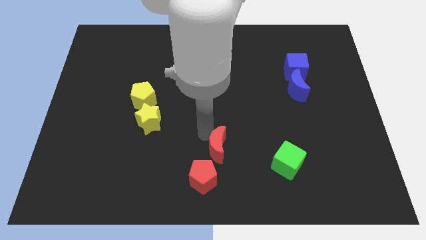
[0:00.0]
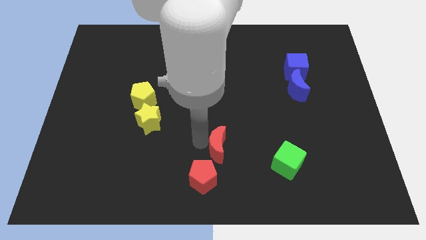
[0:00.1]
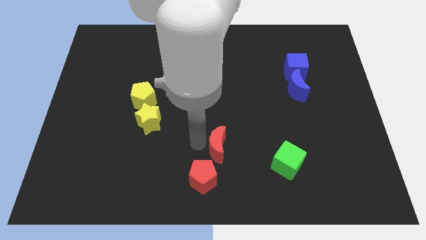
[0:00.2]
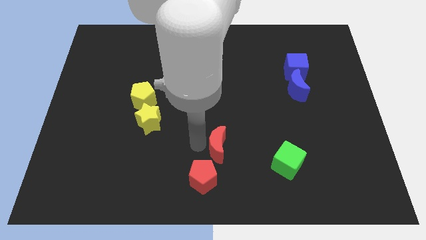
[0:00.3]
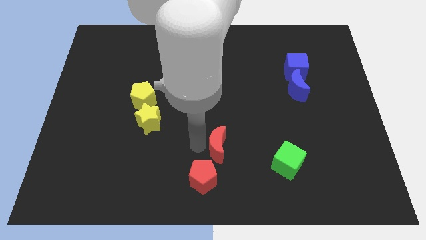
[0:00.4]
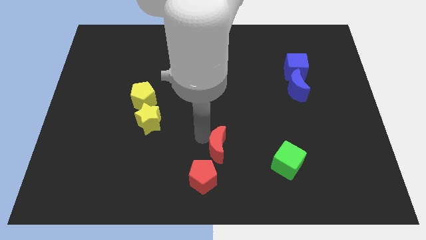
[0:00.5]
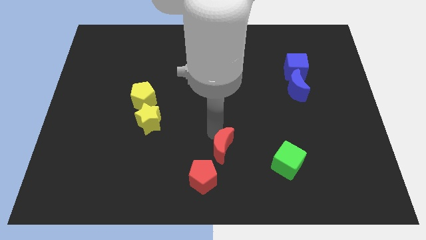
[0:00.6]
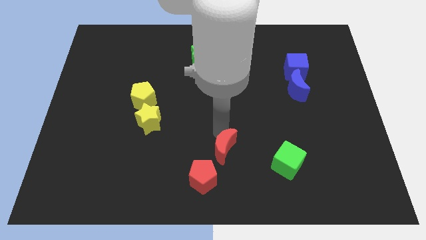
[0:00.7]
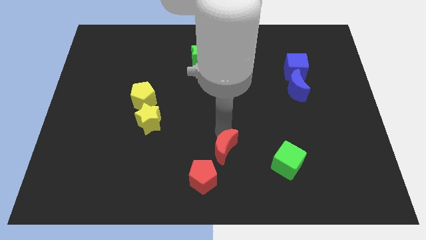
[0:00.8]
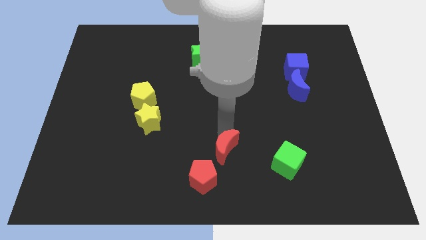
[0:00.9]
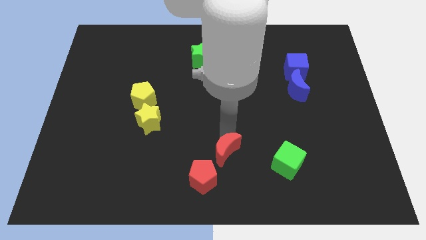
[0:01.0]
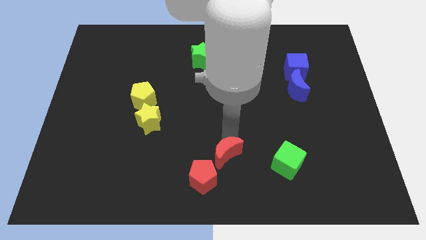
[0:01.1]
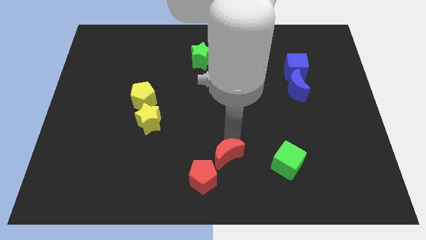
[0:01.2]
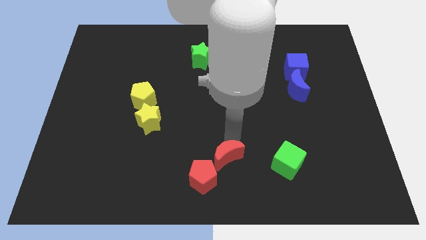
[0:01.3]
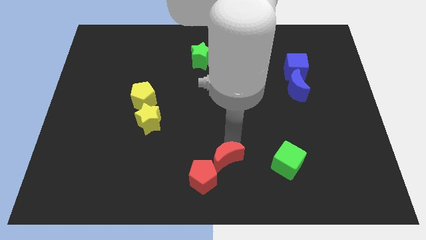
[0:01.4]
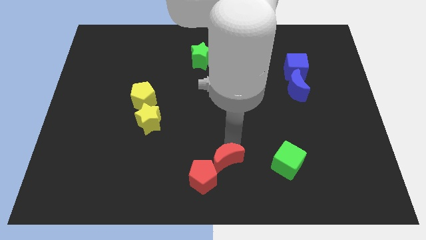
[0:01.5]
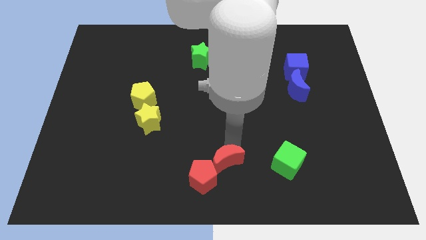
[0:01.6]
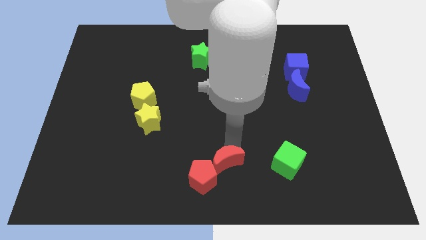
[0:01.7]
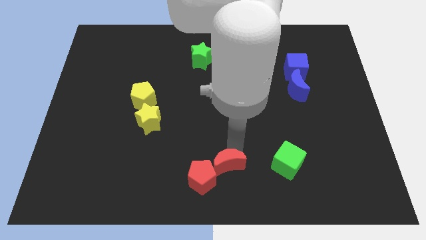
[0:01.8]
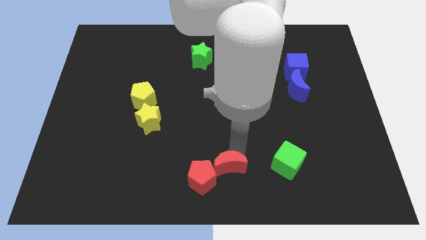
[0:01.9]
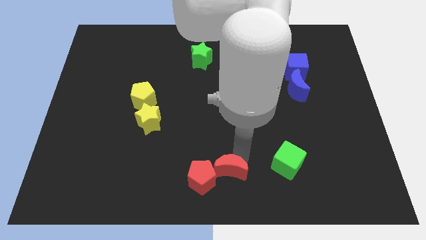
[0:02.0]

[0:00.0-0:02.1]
slide red moon to the right of red pentagon

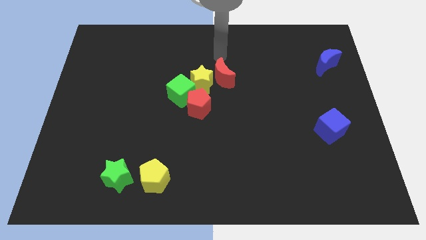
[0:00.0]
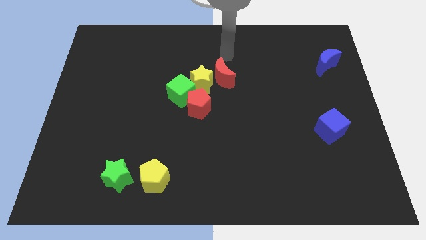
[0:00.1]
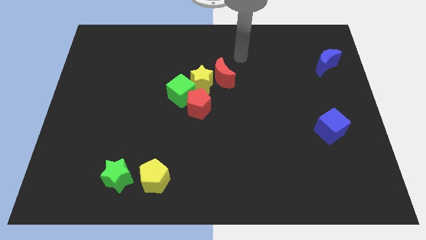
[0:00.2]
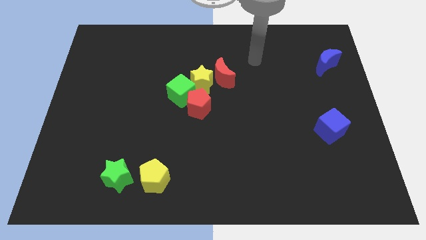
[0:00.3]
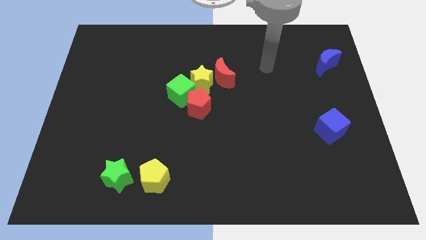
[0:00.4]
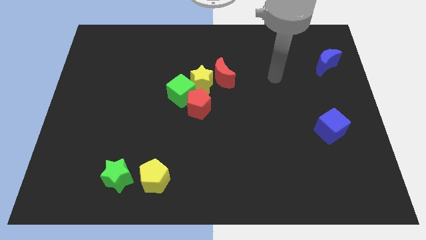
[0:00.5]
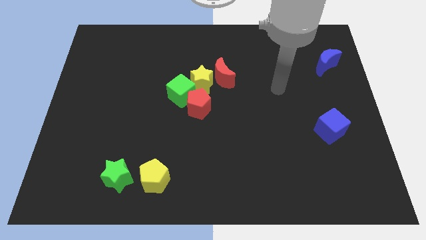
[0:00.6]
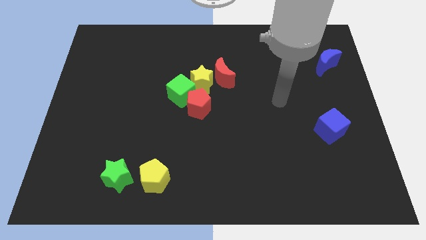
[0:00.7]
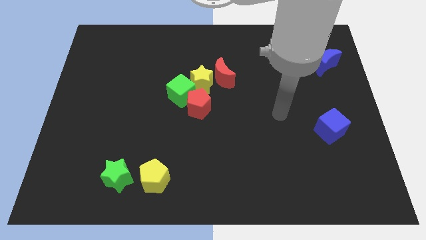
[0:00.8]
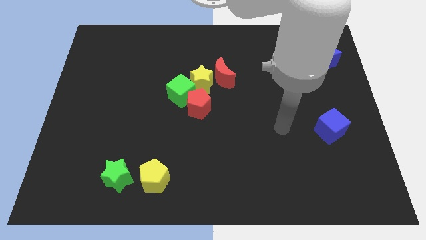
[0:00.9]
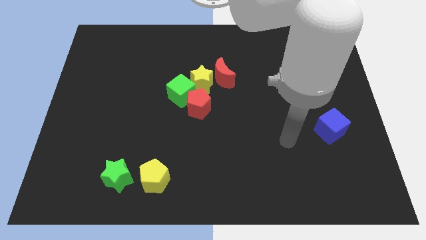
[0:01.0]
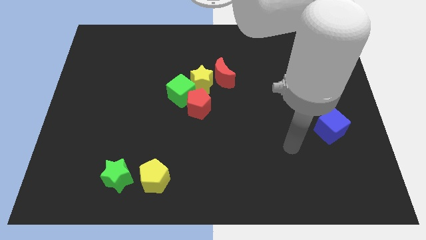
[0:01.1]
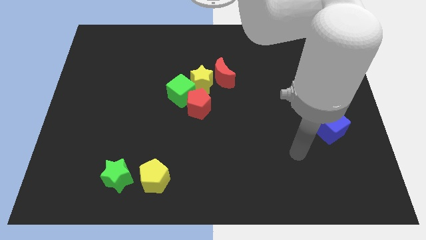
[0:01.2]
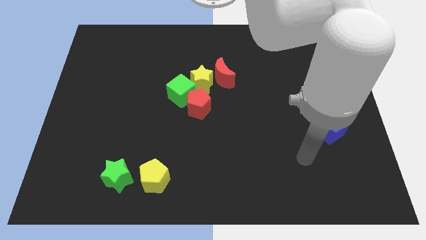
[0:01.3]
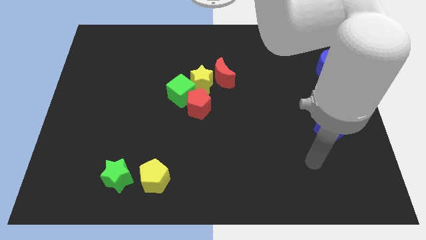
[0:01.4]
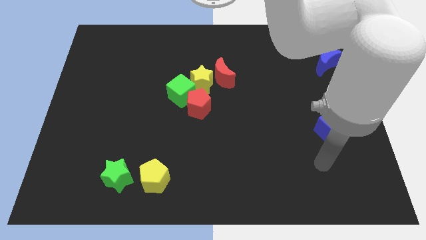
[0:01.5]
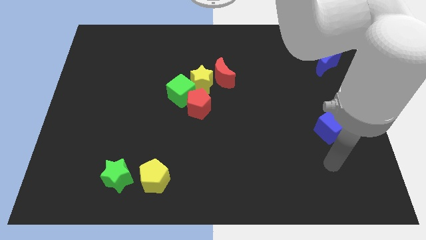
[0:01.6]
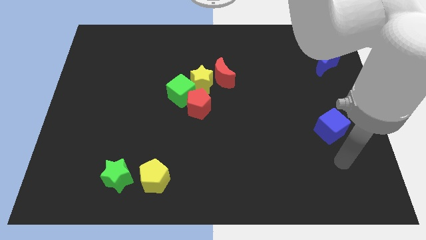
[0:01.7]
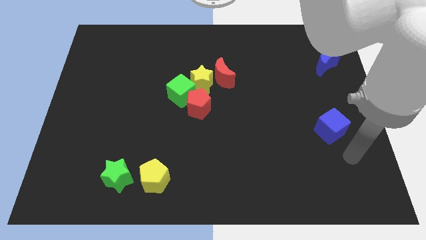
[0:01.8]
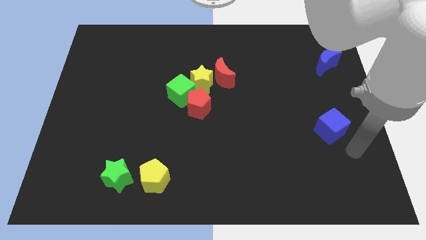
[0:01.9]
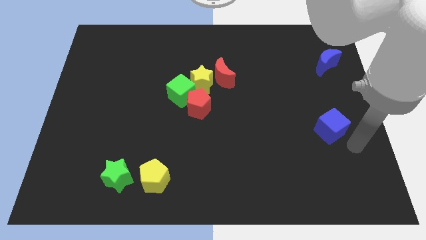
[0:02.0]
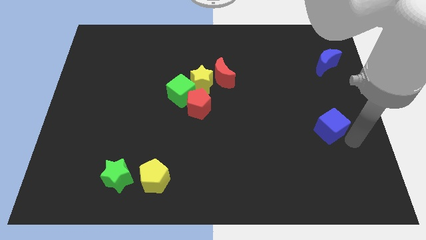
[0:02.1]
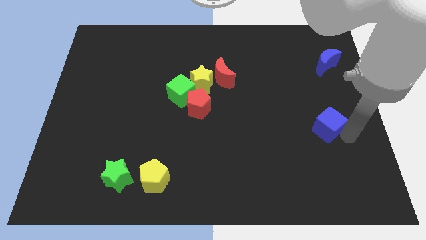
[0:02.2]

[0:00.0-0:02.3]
move your arm towards blue cube

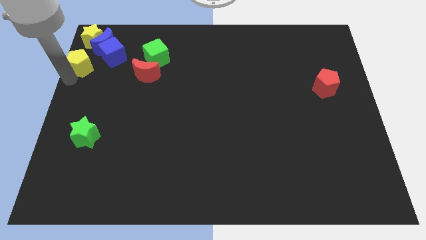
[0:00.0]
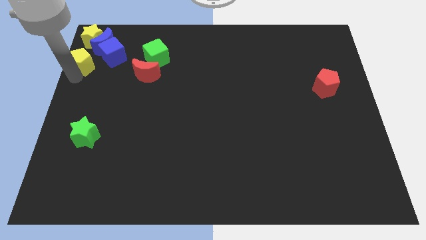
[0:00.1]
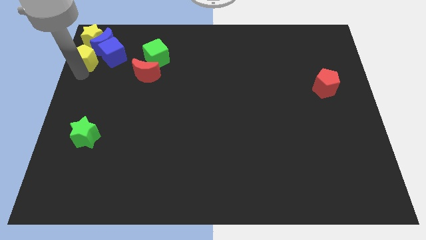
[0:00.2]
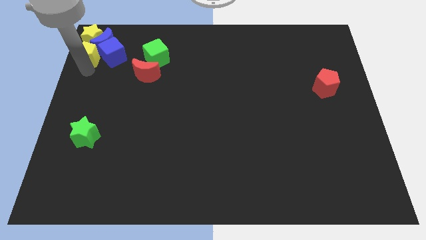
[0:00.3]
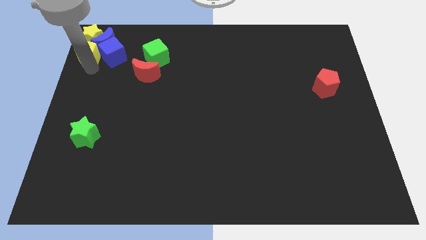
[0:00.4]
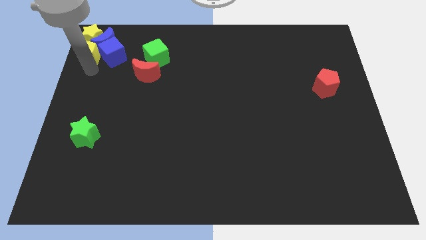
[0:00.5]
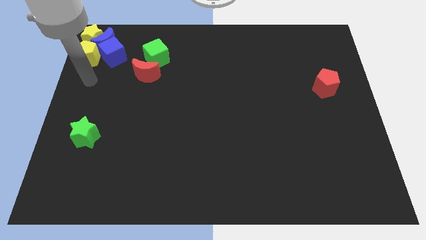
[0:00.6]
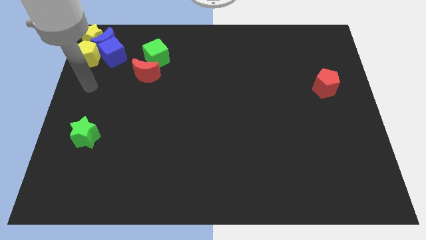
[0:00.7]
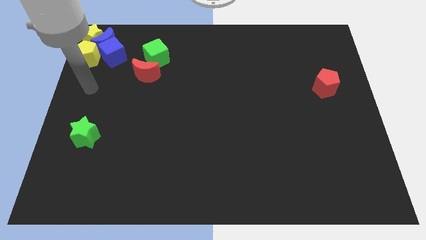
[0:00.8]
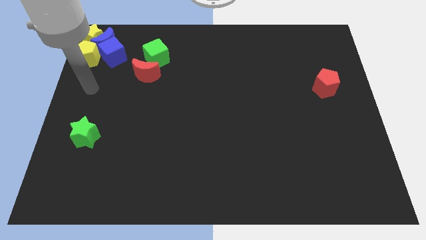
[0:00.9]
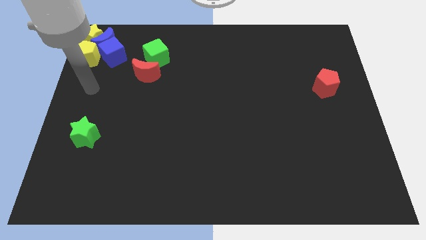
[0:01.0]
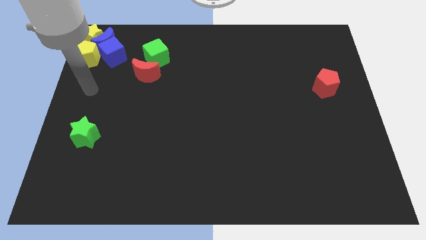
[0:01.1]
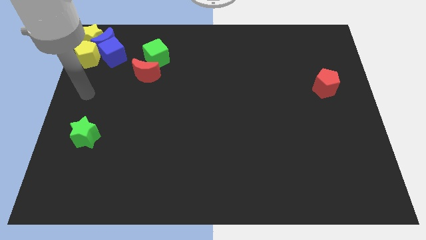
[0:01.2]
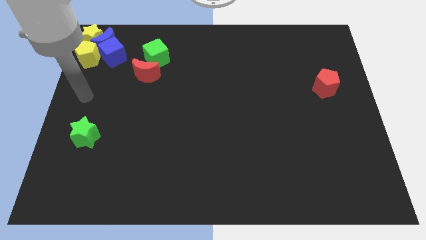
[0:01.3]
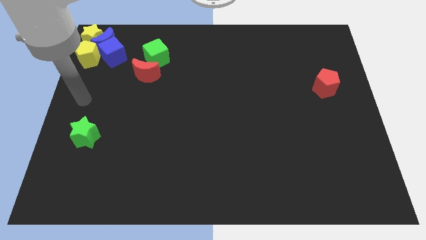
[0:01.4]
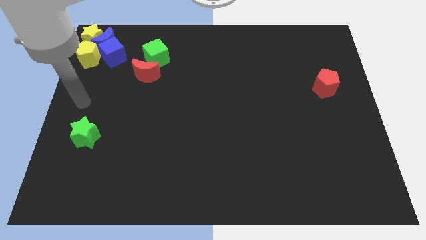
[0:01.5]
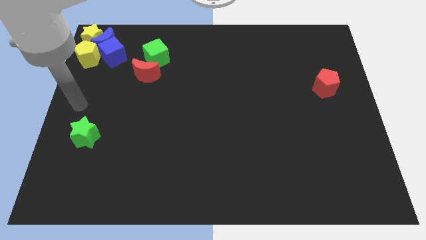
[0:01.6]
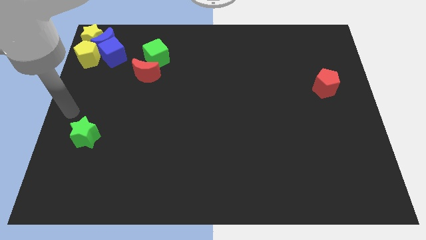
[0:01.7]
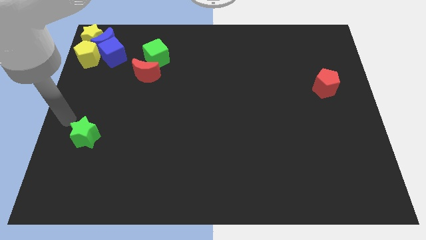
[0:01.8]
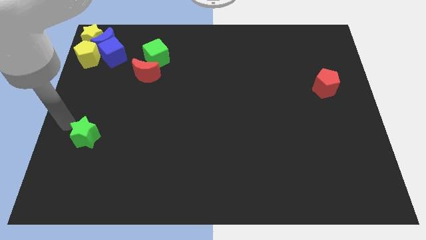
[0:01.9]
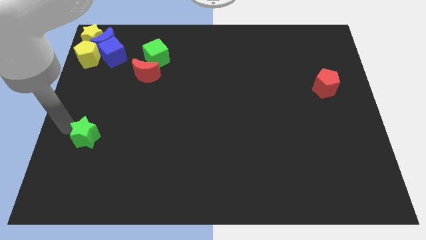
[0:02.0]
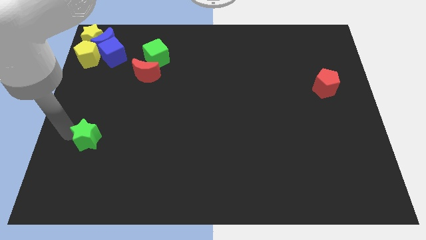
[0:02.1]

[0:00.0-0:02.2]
push the yellow pentagon into the group of blocks

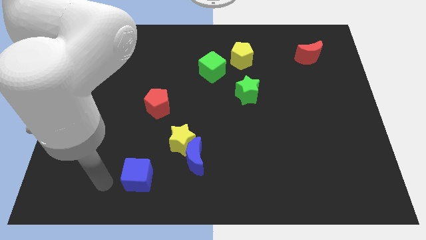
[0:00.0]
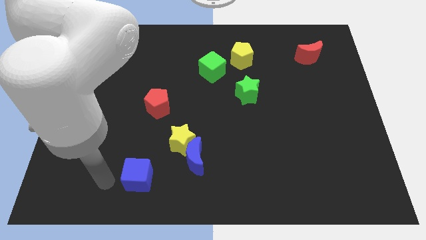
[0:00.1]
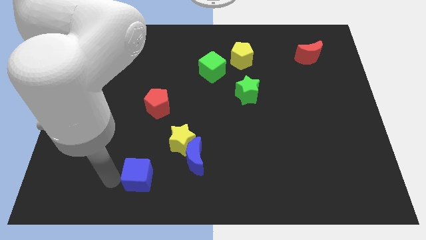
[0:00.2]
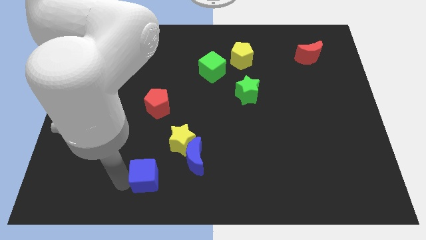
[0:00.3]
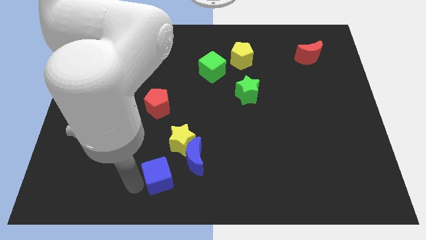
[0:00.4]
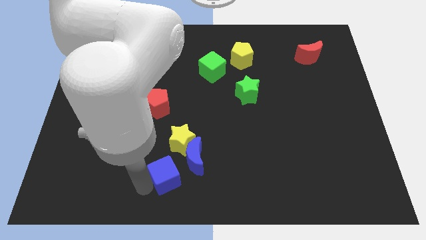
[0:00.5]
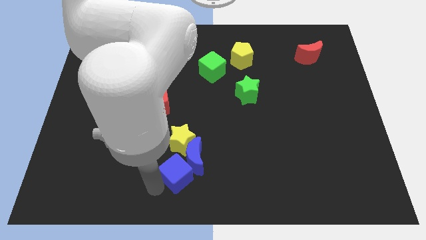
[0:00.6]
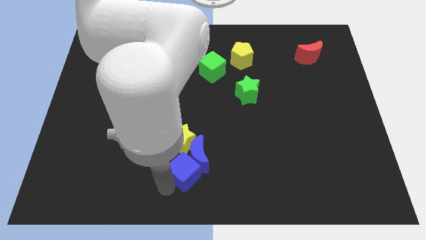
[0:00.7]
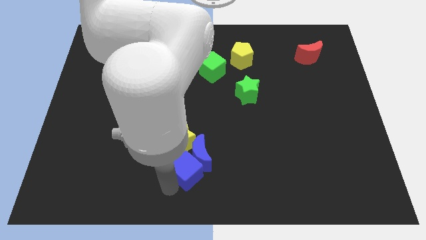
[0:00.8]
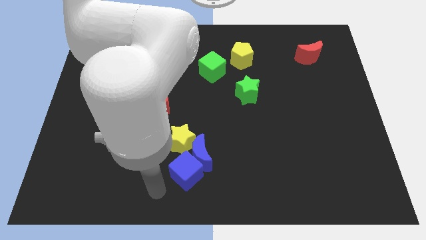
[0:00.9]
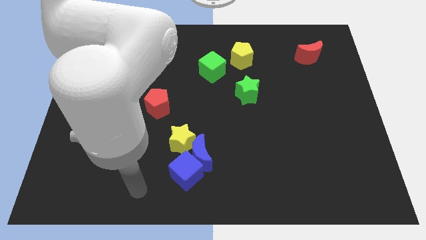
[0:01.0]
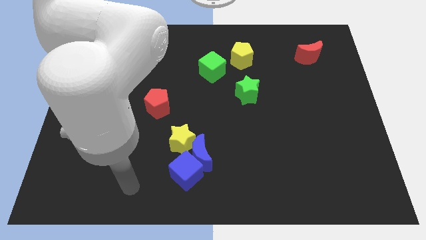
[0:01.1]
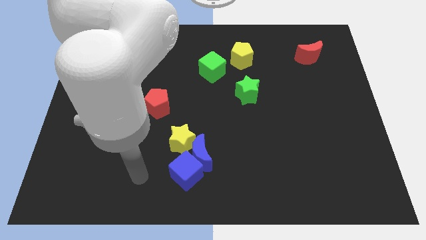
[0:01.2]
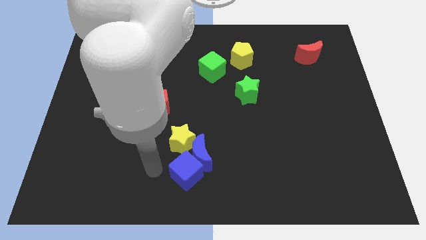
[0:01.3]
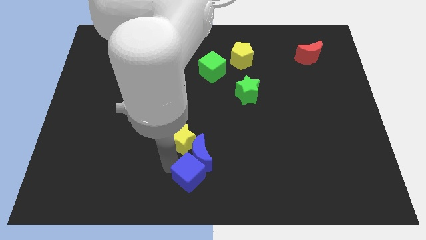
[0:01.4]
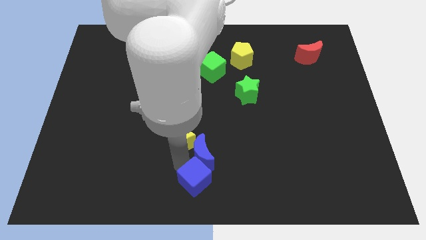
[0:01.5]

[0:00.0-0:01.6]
push the blue cube into the blue moon

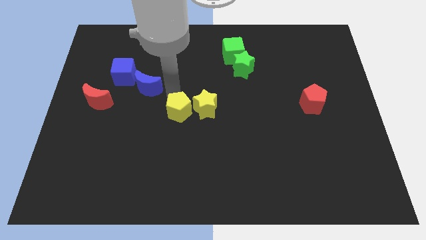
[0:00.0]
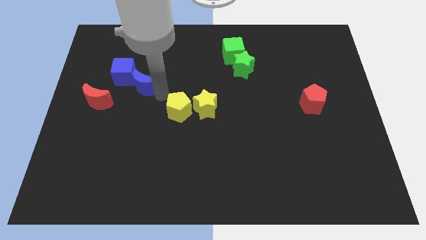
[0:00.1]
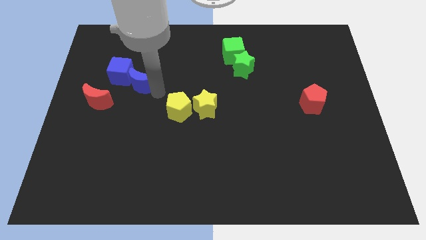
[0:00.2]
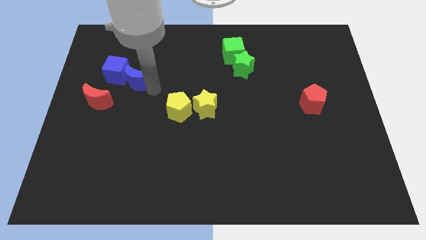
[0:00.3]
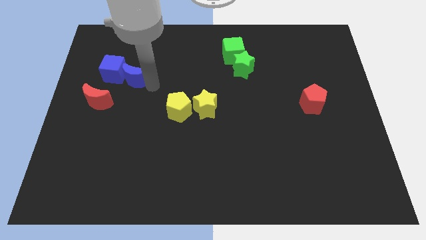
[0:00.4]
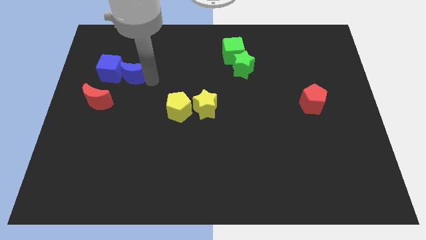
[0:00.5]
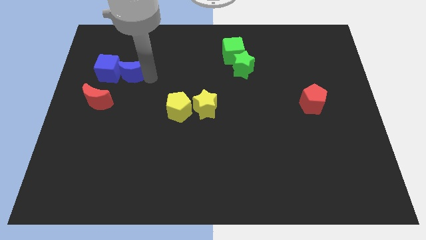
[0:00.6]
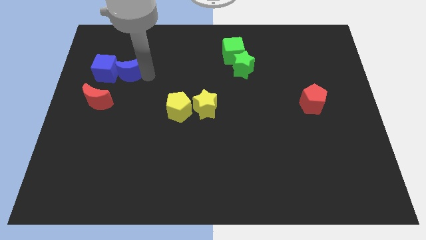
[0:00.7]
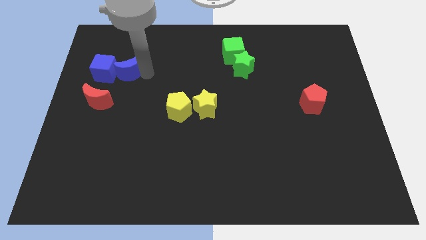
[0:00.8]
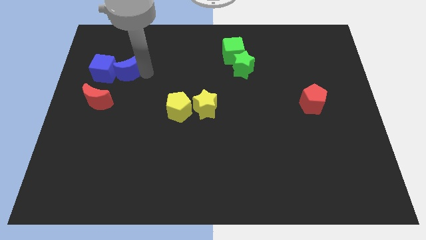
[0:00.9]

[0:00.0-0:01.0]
push the blue crescent into the blue cube

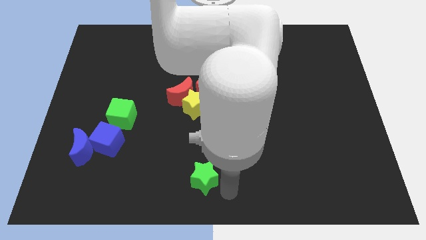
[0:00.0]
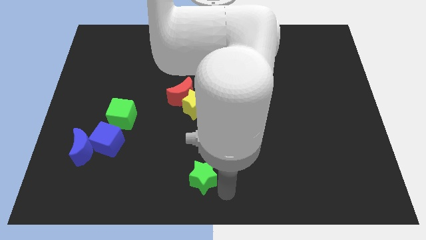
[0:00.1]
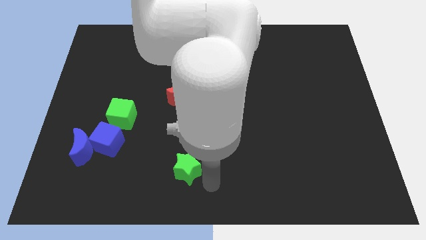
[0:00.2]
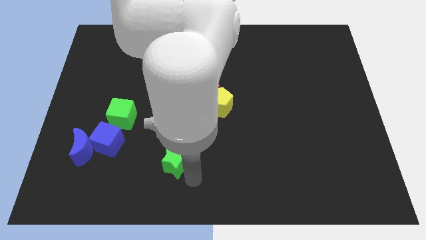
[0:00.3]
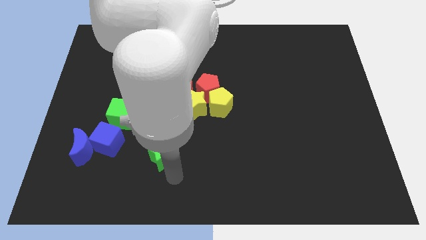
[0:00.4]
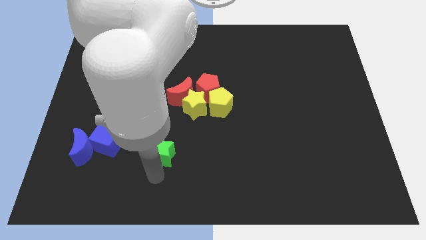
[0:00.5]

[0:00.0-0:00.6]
push green star below red crescent
